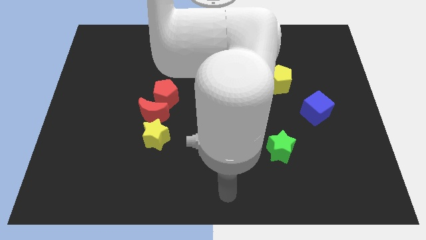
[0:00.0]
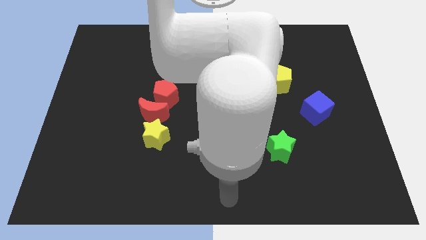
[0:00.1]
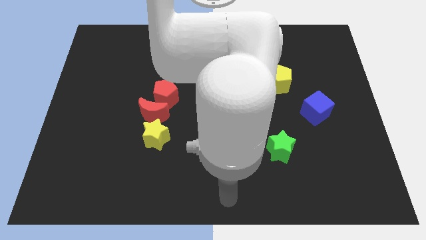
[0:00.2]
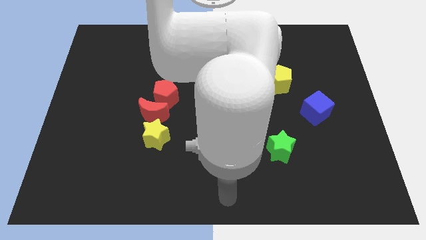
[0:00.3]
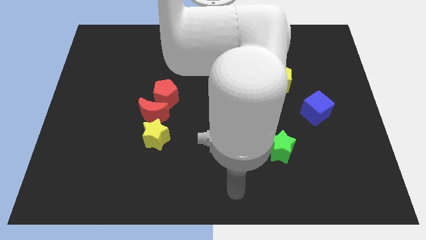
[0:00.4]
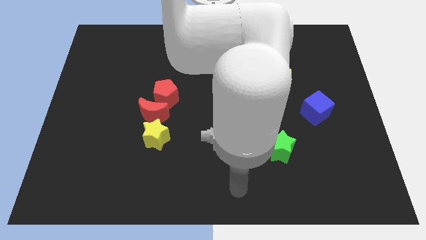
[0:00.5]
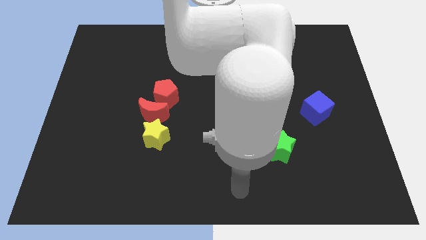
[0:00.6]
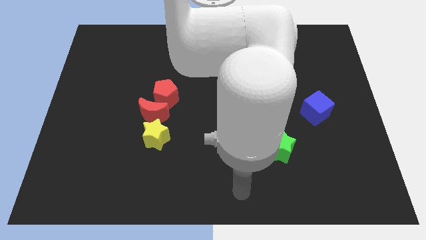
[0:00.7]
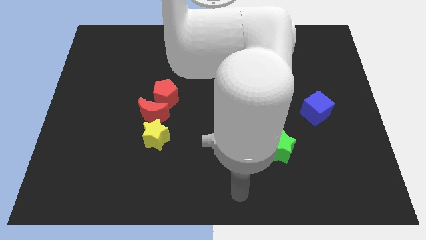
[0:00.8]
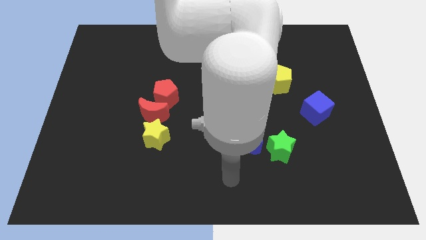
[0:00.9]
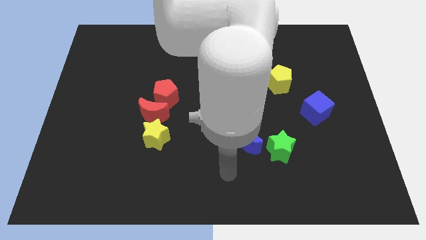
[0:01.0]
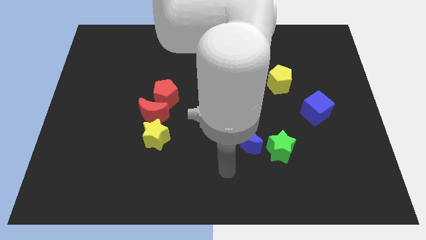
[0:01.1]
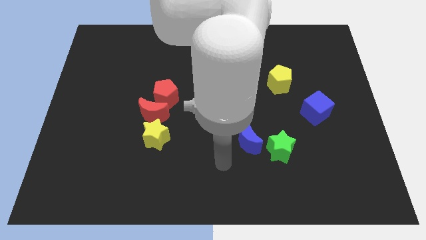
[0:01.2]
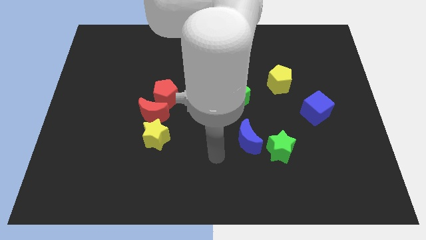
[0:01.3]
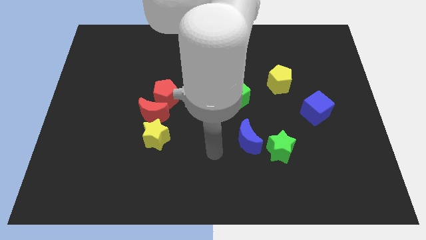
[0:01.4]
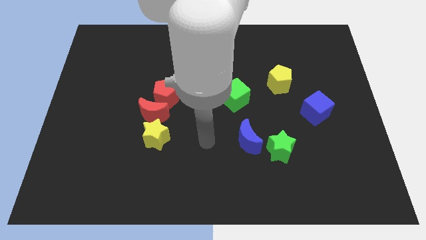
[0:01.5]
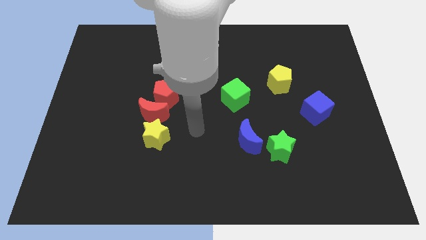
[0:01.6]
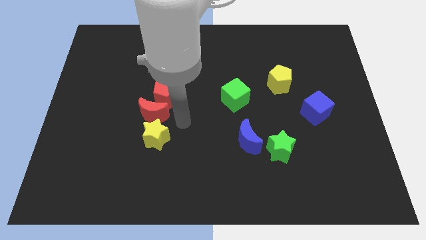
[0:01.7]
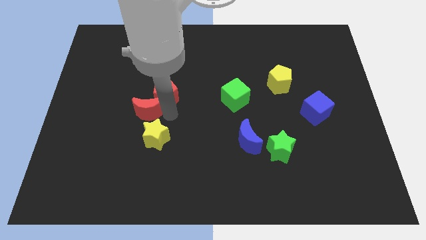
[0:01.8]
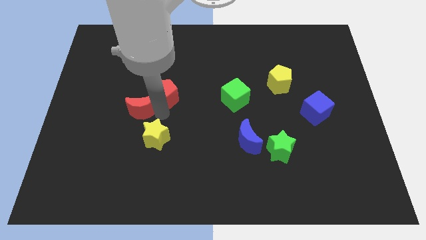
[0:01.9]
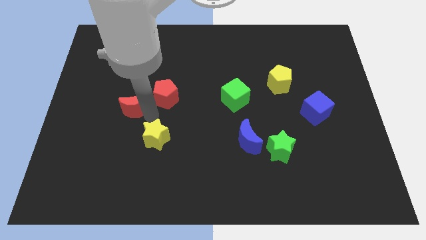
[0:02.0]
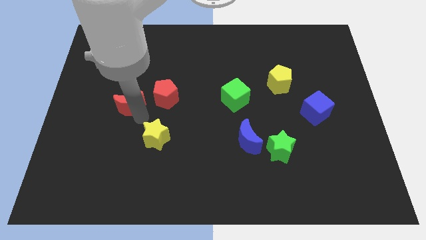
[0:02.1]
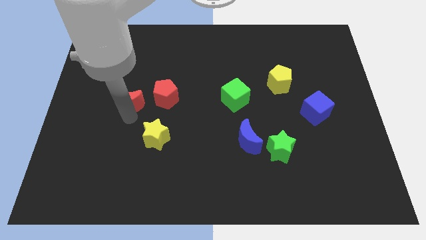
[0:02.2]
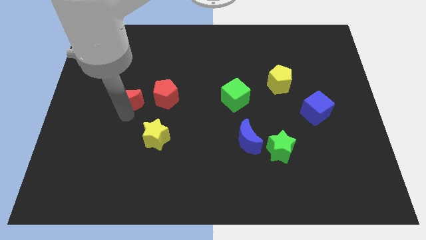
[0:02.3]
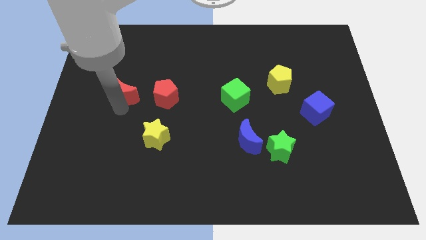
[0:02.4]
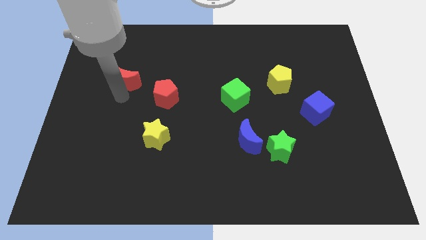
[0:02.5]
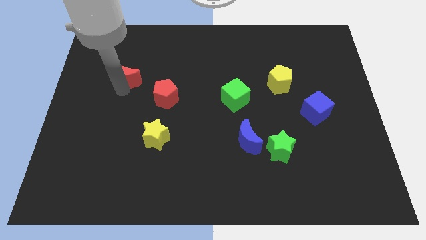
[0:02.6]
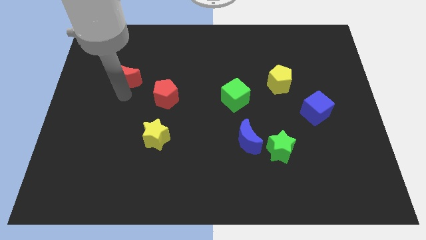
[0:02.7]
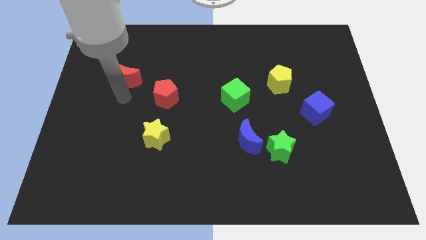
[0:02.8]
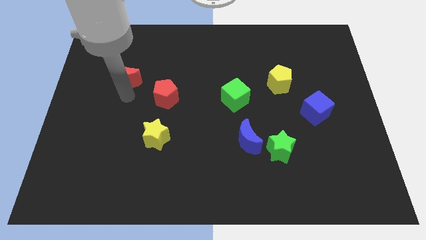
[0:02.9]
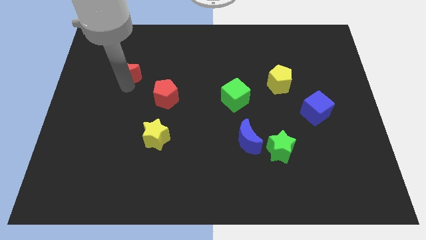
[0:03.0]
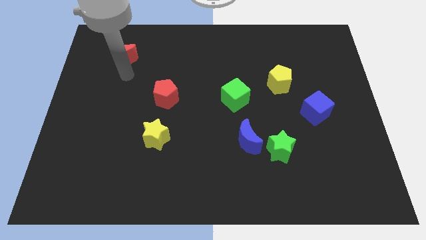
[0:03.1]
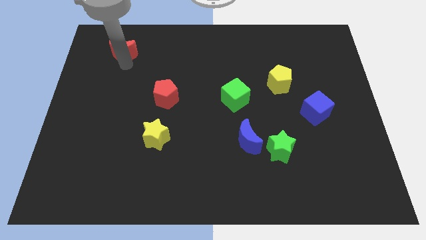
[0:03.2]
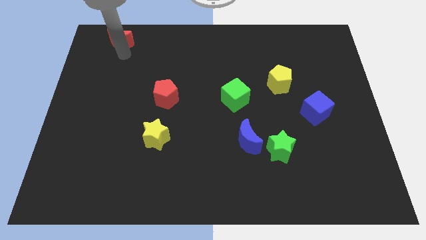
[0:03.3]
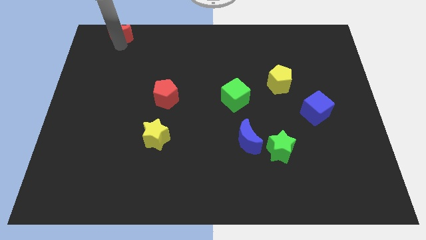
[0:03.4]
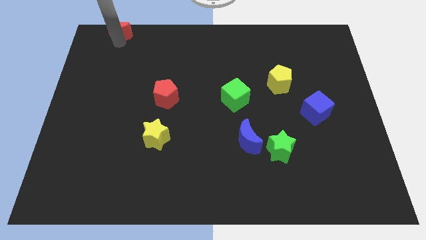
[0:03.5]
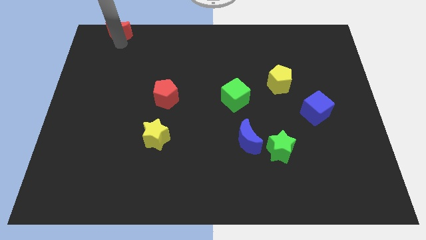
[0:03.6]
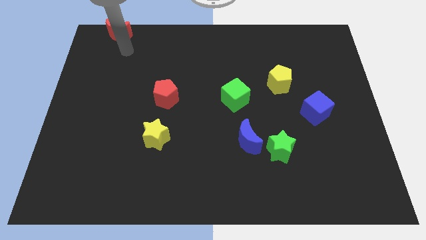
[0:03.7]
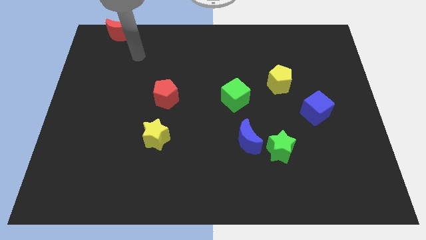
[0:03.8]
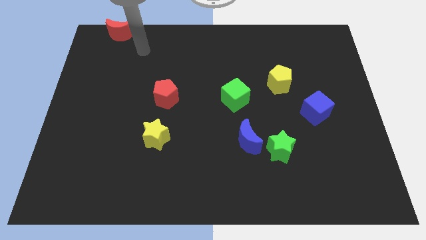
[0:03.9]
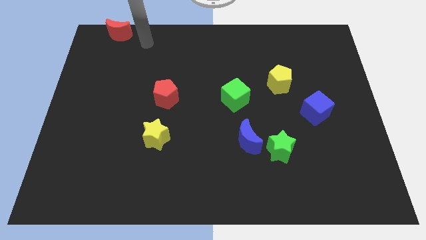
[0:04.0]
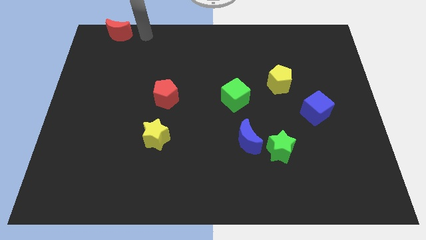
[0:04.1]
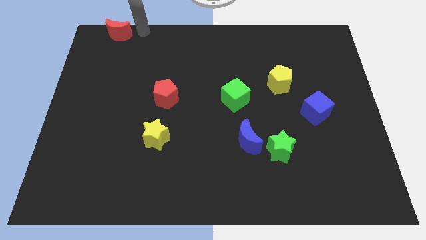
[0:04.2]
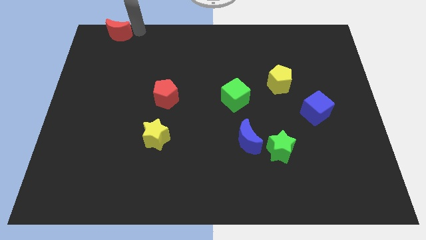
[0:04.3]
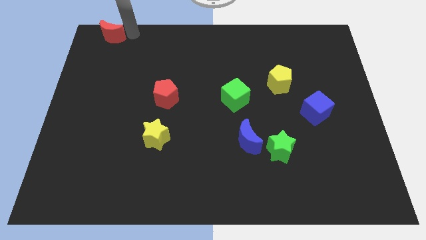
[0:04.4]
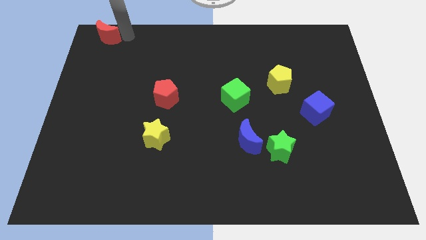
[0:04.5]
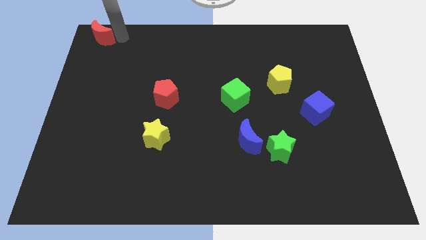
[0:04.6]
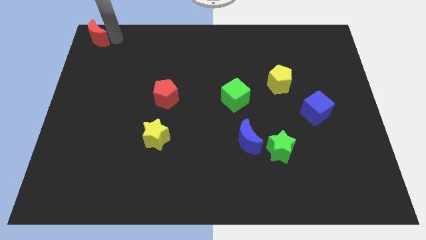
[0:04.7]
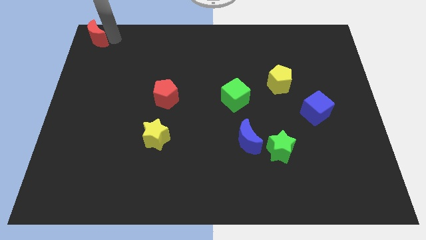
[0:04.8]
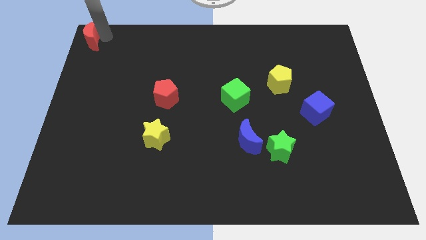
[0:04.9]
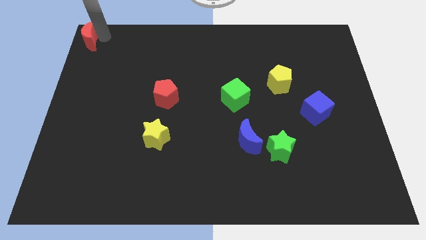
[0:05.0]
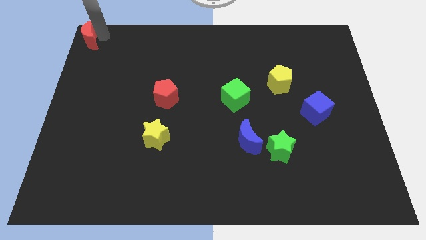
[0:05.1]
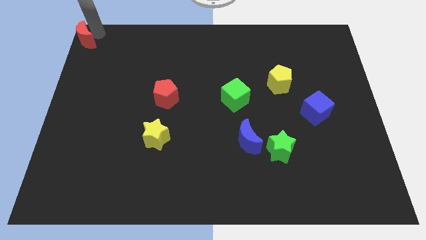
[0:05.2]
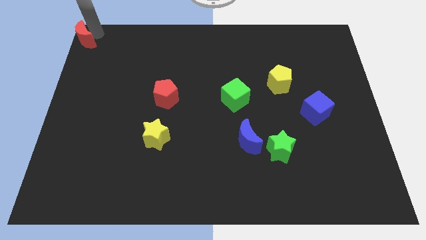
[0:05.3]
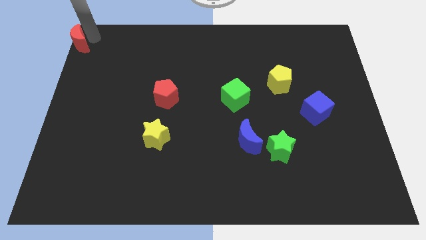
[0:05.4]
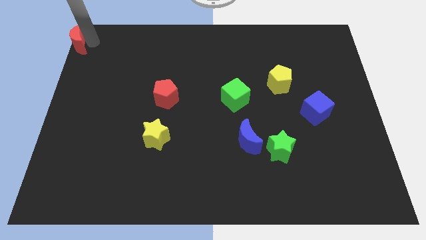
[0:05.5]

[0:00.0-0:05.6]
push the red moon to the top right corner

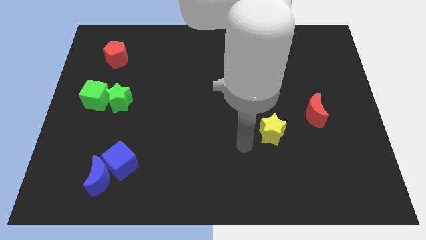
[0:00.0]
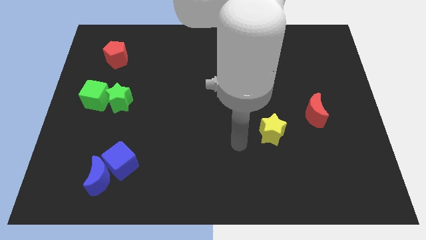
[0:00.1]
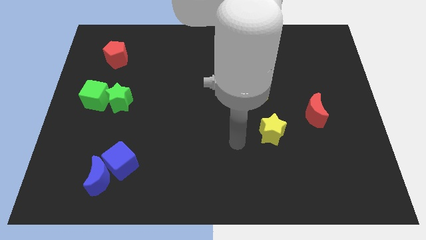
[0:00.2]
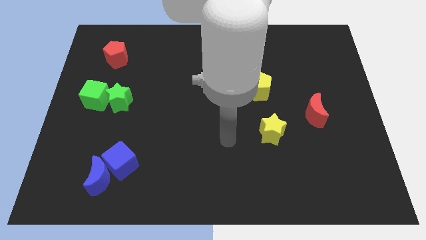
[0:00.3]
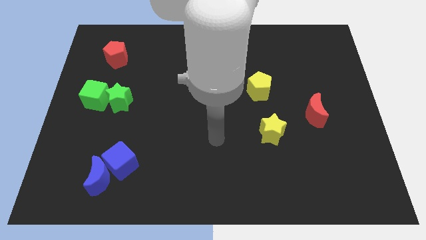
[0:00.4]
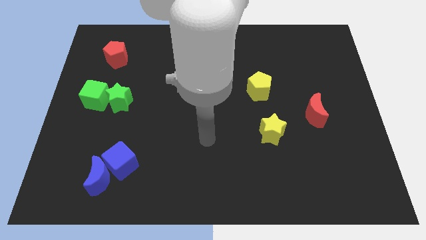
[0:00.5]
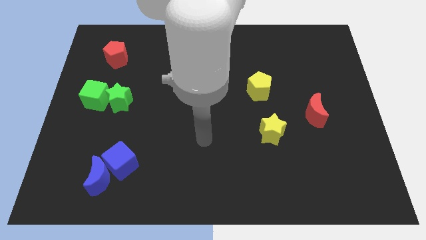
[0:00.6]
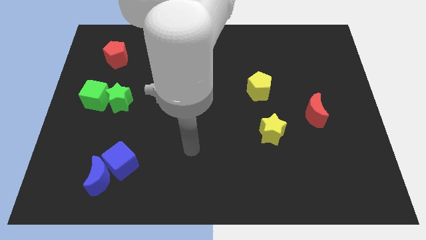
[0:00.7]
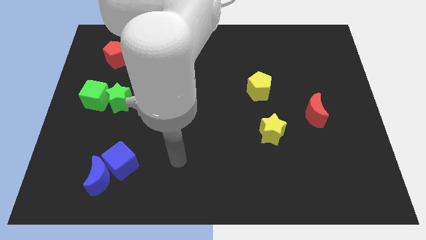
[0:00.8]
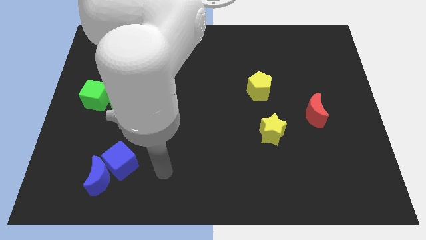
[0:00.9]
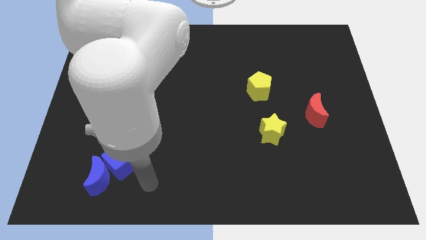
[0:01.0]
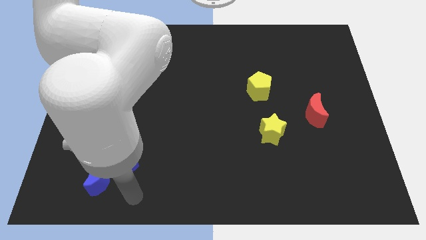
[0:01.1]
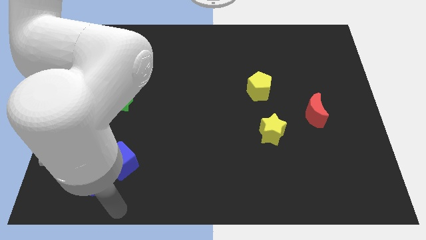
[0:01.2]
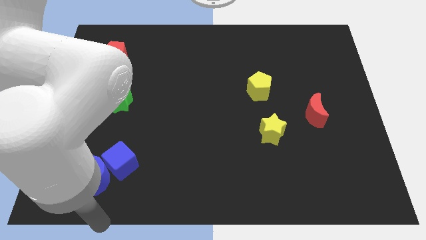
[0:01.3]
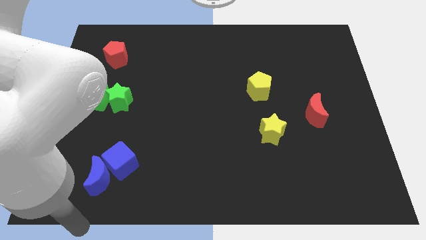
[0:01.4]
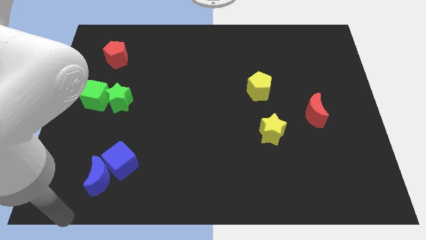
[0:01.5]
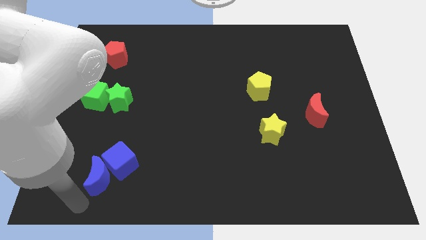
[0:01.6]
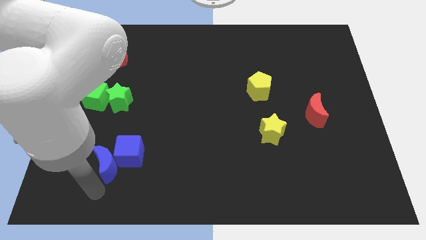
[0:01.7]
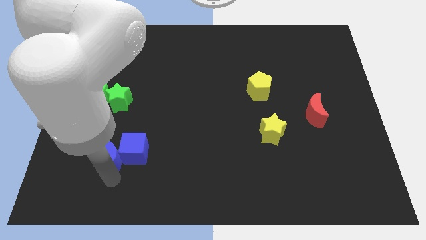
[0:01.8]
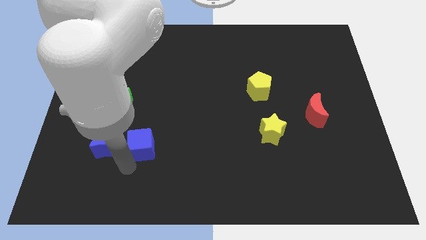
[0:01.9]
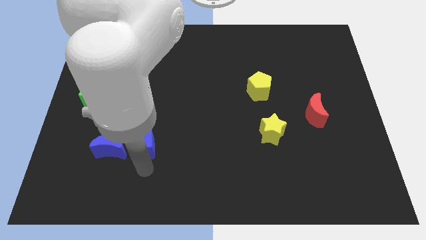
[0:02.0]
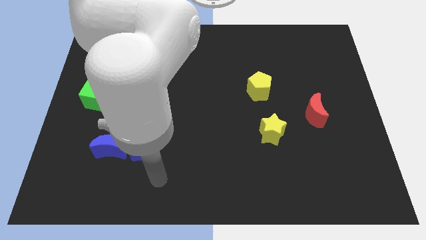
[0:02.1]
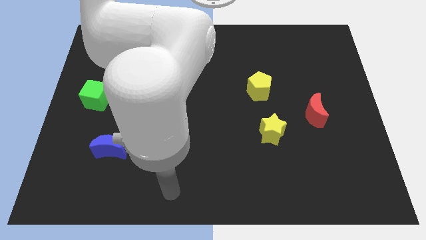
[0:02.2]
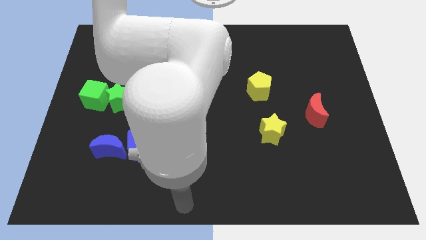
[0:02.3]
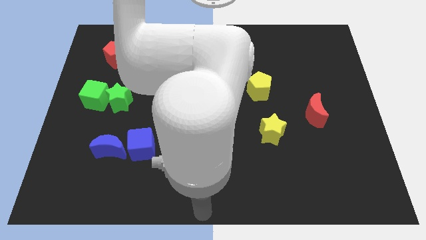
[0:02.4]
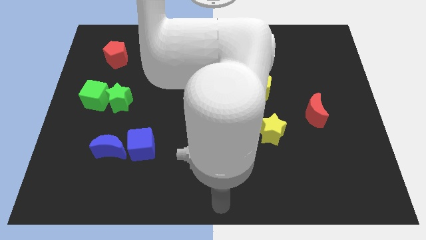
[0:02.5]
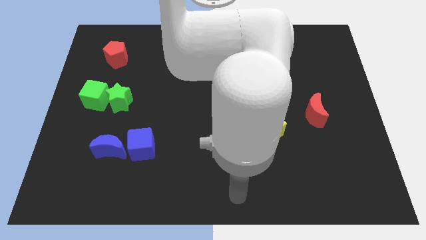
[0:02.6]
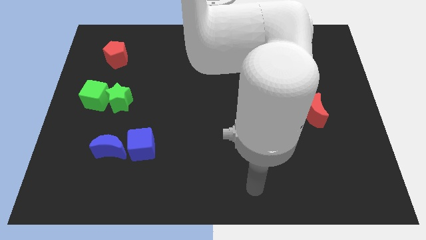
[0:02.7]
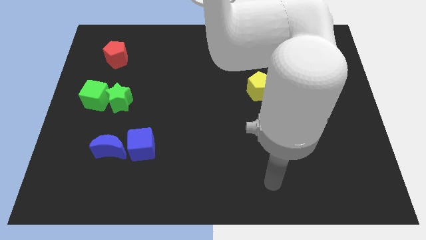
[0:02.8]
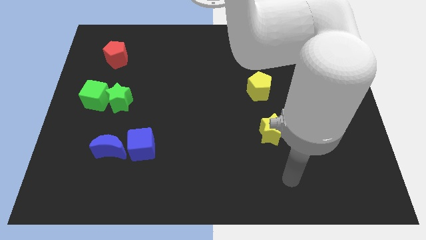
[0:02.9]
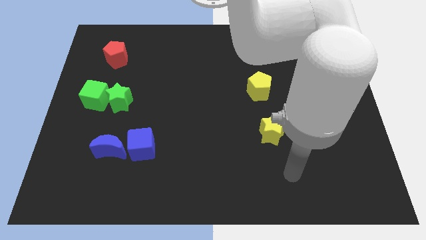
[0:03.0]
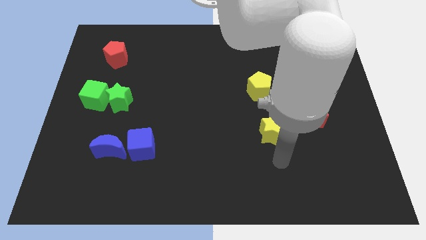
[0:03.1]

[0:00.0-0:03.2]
push the blue moon and blue cube upwards

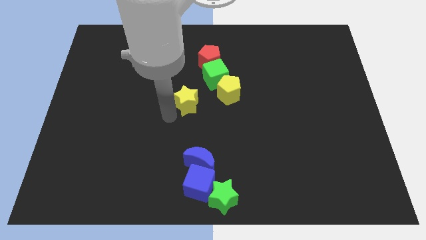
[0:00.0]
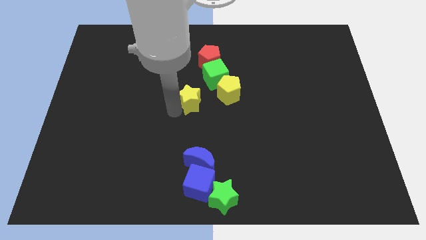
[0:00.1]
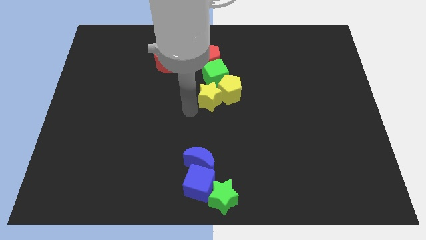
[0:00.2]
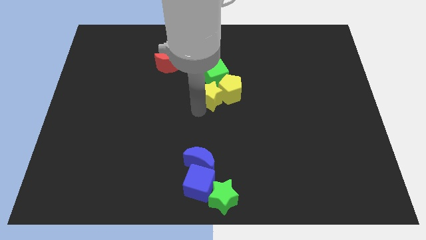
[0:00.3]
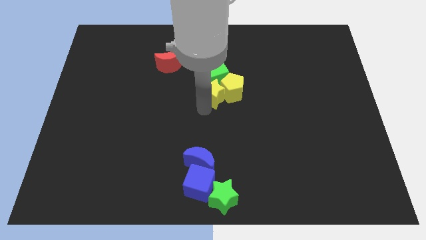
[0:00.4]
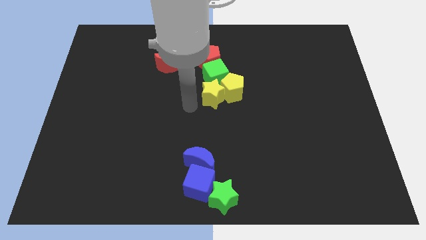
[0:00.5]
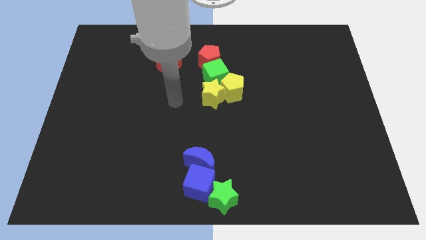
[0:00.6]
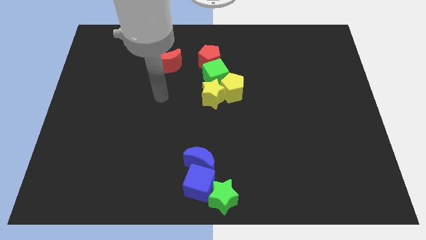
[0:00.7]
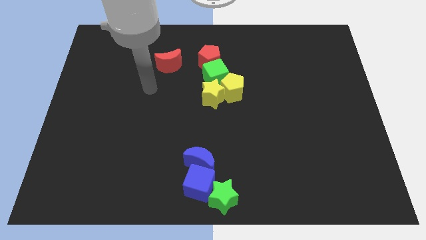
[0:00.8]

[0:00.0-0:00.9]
push the yellow star into the yellow pentagon
